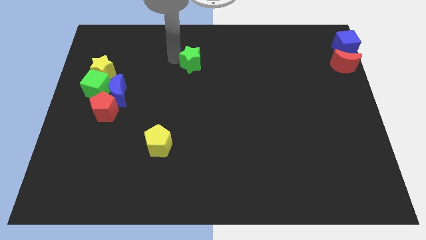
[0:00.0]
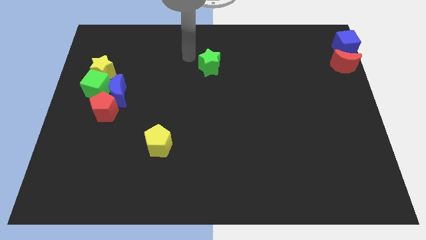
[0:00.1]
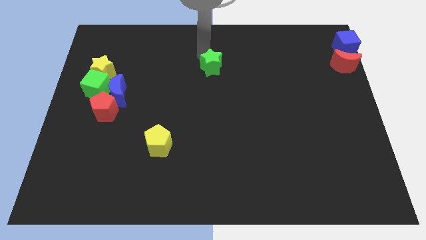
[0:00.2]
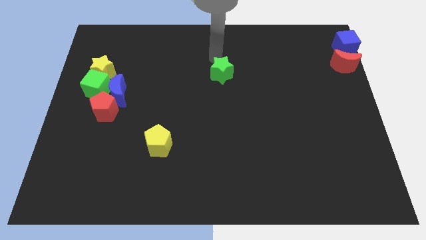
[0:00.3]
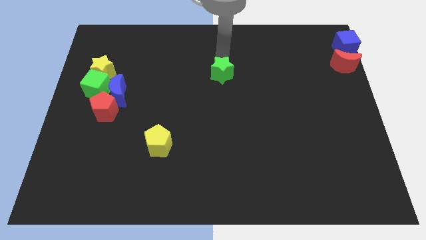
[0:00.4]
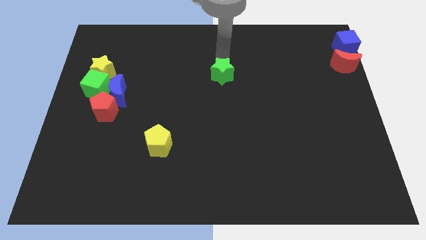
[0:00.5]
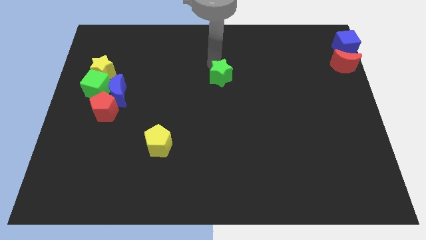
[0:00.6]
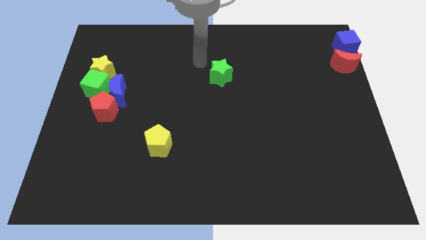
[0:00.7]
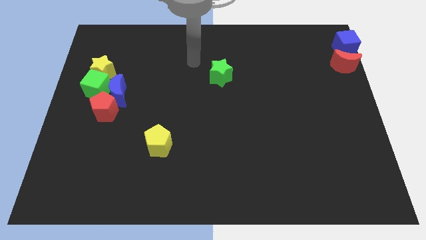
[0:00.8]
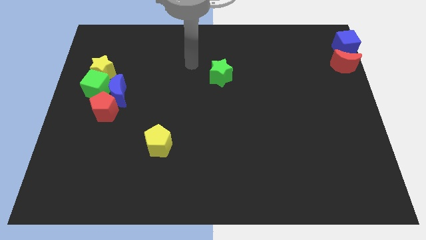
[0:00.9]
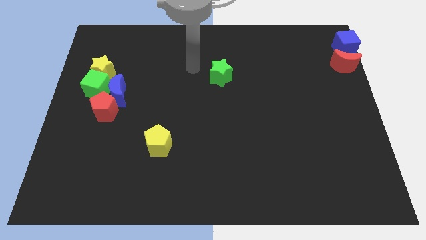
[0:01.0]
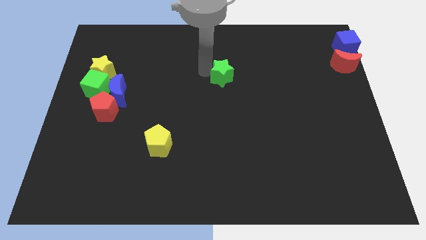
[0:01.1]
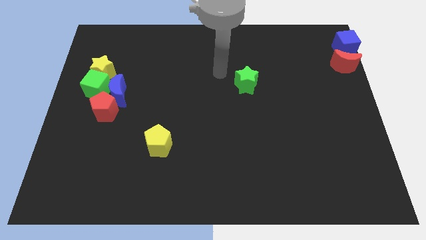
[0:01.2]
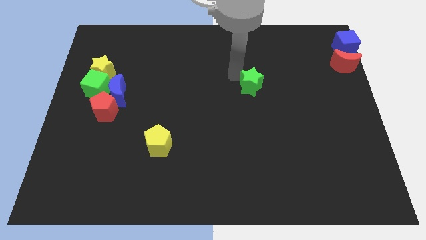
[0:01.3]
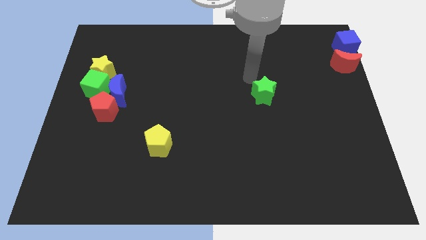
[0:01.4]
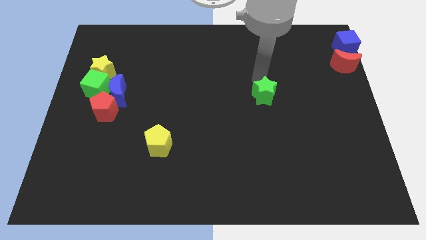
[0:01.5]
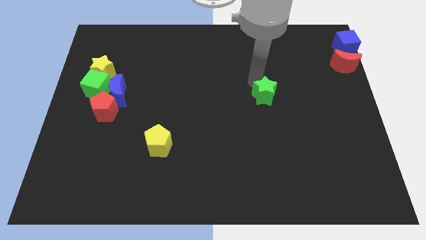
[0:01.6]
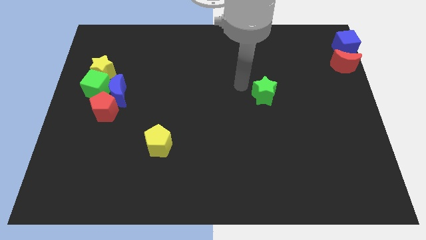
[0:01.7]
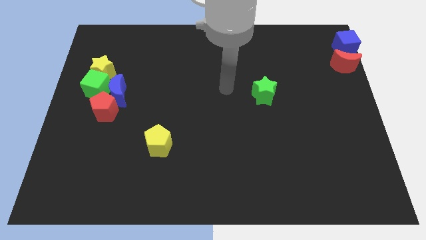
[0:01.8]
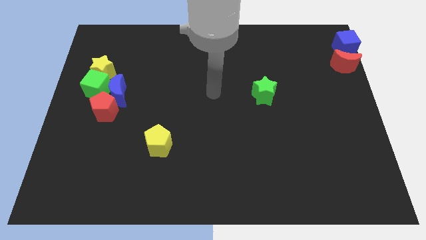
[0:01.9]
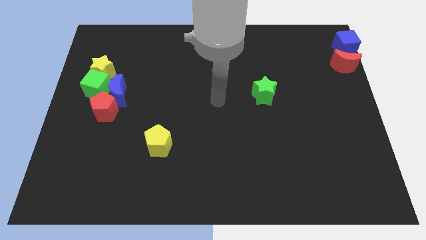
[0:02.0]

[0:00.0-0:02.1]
drag green star slightly towards the center right of the board

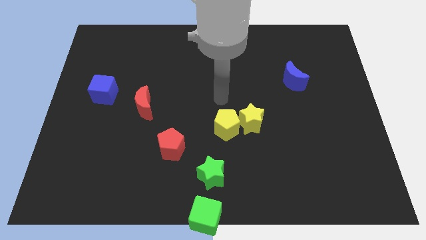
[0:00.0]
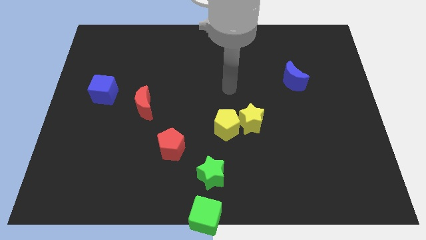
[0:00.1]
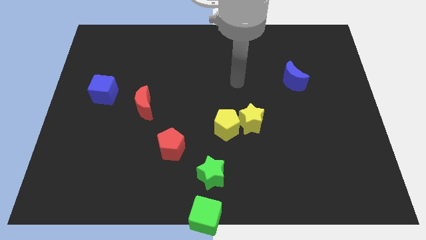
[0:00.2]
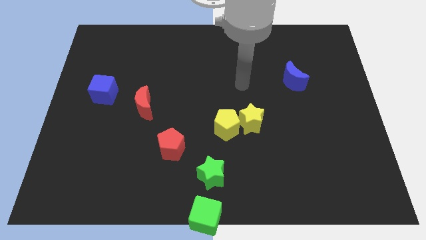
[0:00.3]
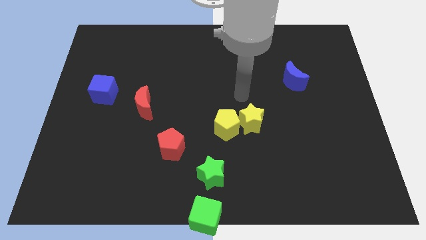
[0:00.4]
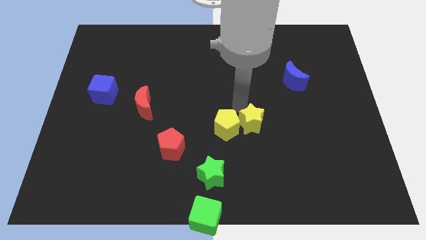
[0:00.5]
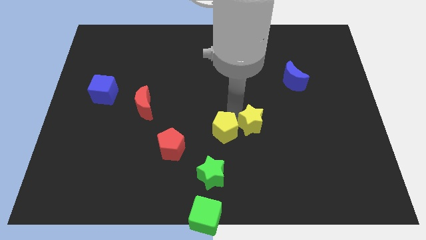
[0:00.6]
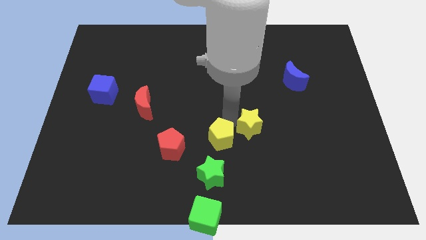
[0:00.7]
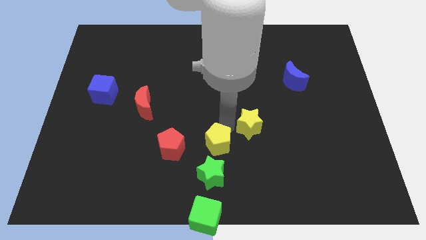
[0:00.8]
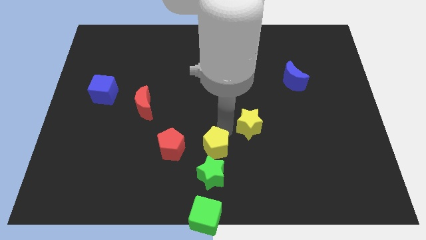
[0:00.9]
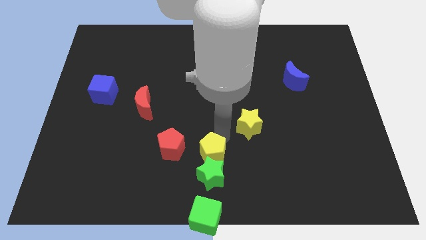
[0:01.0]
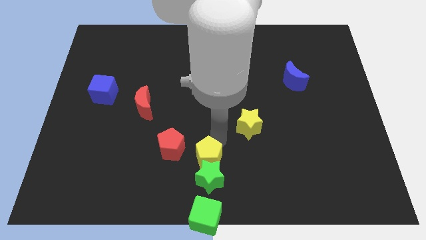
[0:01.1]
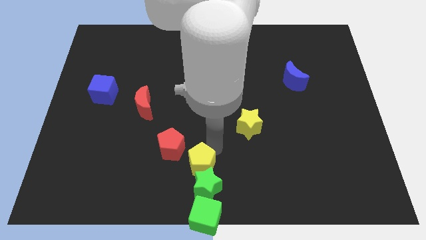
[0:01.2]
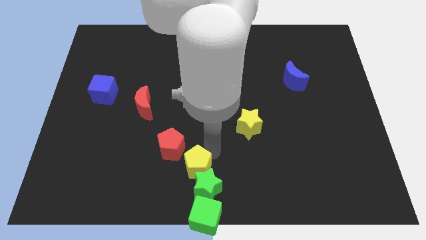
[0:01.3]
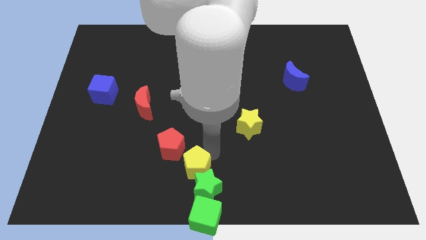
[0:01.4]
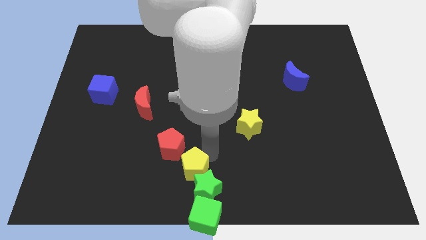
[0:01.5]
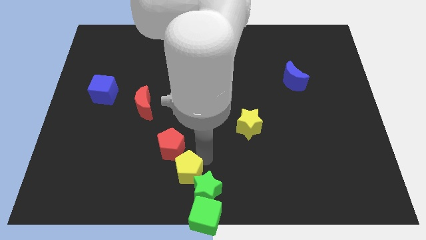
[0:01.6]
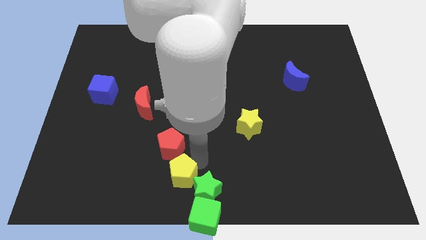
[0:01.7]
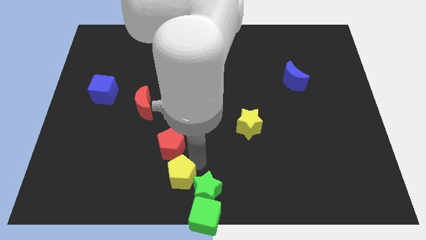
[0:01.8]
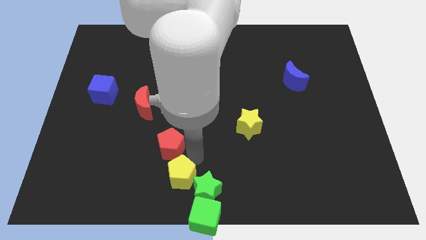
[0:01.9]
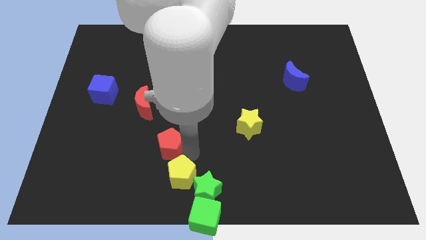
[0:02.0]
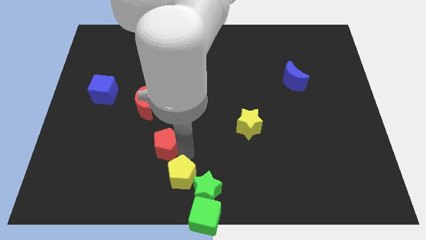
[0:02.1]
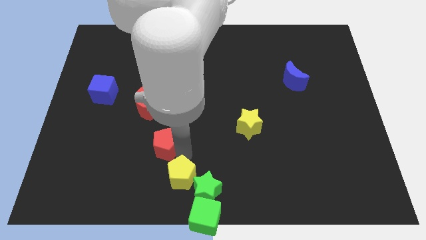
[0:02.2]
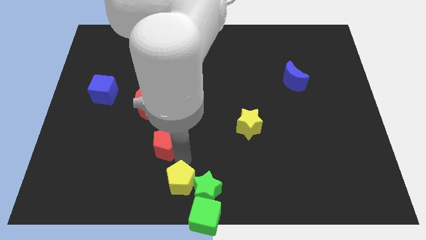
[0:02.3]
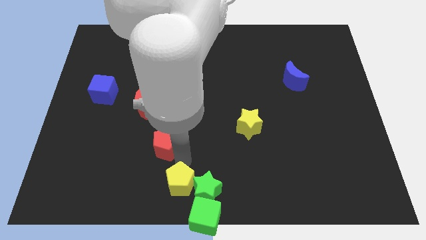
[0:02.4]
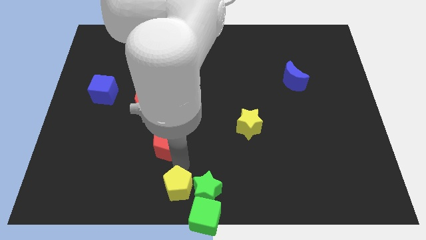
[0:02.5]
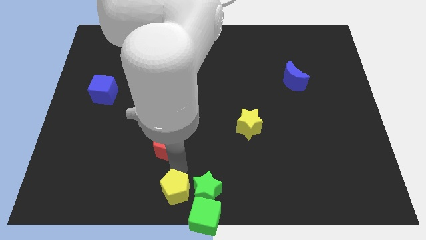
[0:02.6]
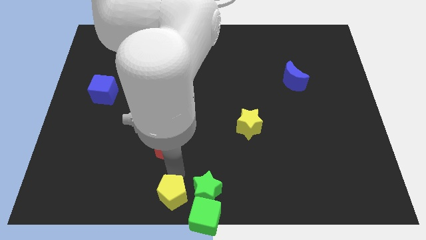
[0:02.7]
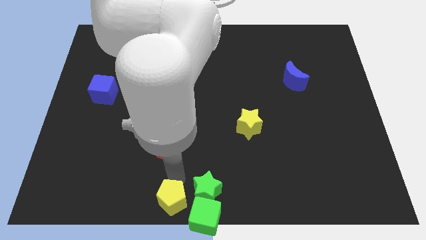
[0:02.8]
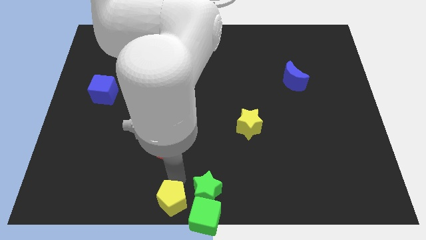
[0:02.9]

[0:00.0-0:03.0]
slide the yellow pentagon left to the green star

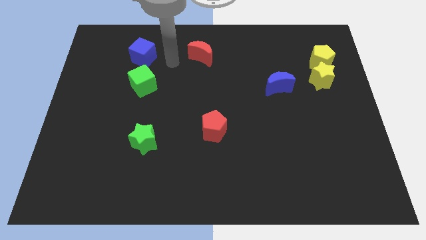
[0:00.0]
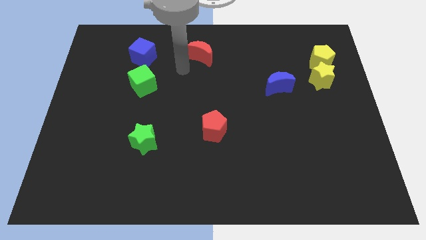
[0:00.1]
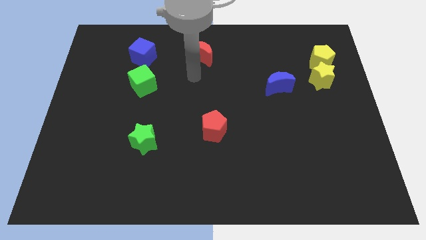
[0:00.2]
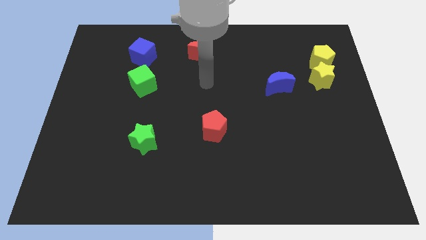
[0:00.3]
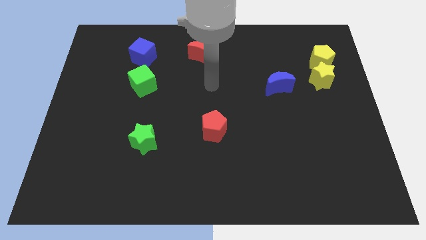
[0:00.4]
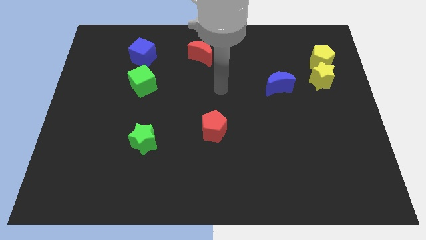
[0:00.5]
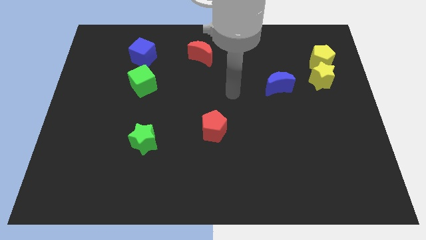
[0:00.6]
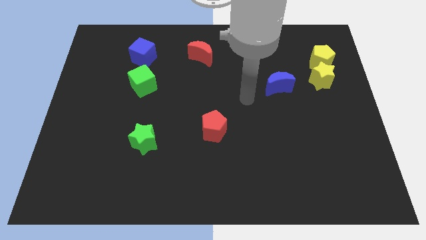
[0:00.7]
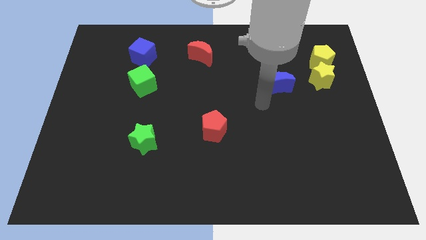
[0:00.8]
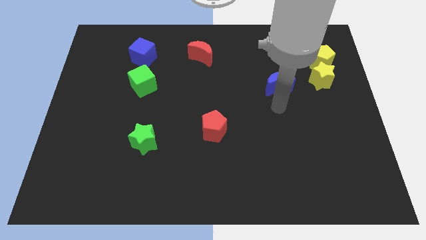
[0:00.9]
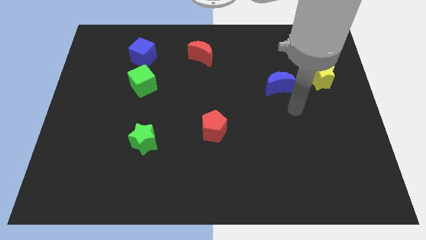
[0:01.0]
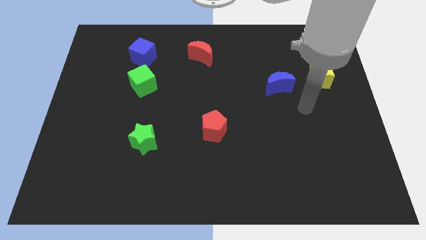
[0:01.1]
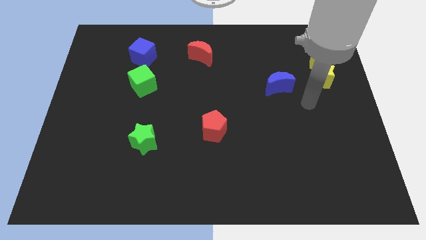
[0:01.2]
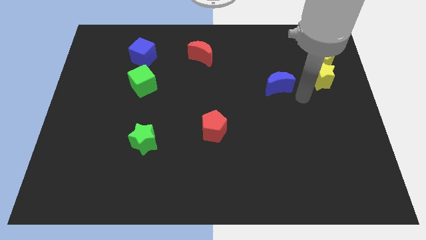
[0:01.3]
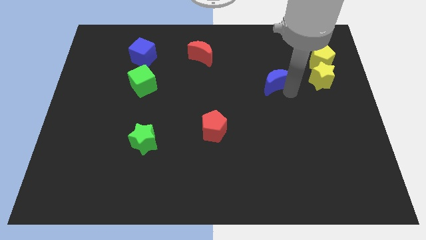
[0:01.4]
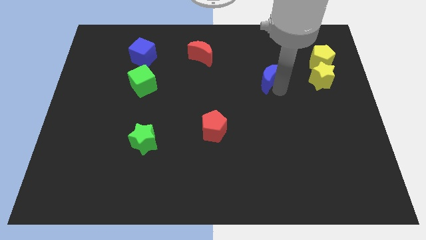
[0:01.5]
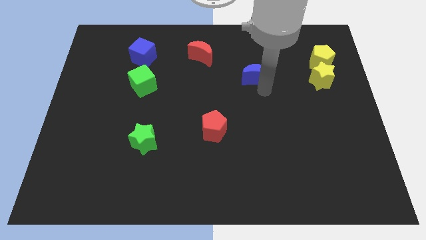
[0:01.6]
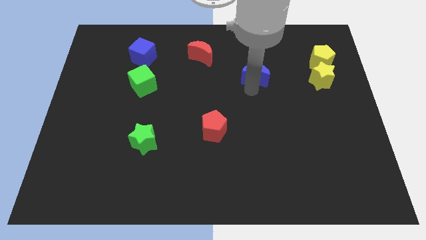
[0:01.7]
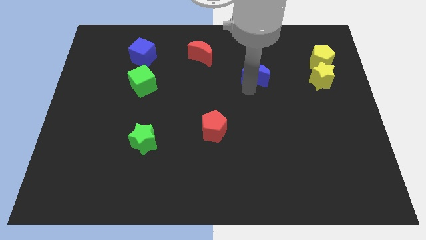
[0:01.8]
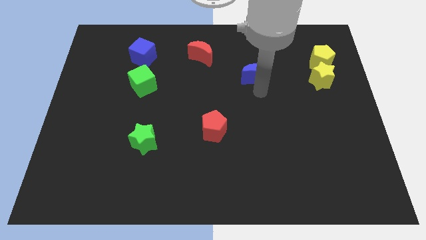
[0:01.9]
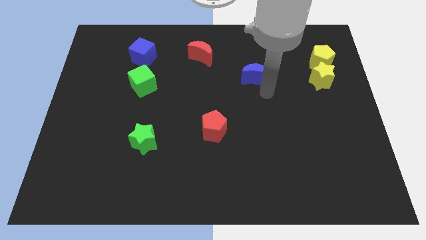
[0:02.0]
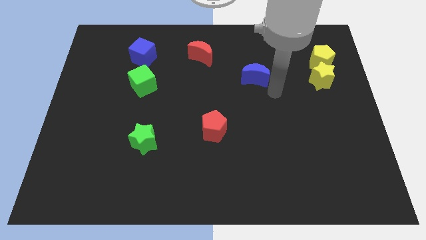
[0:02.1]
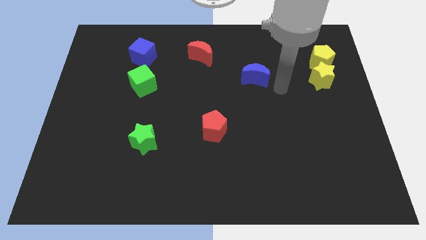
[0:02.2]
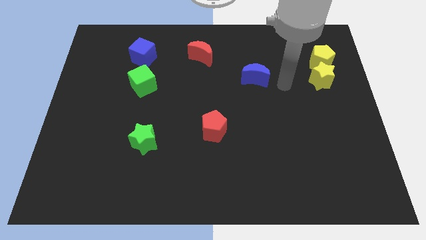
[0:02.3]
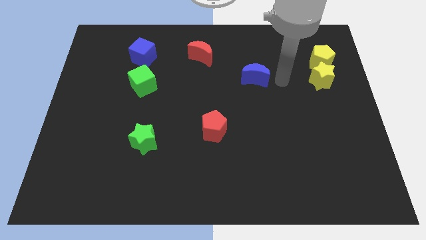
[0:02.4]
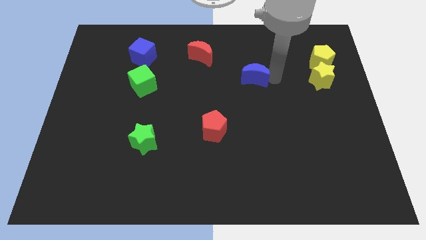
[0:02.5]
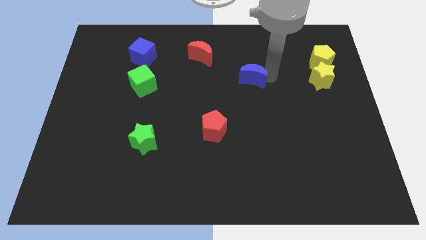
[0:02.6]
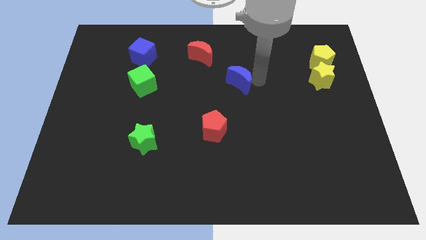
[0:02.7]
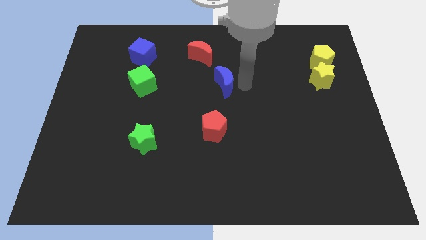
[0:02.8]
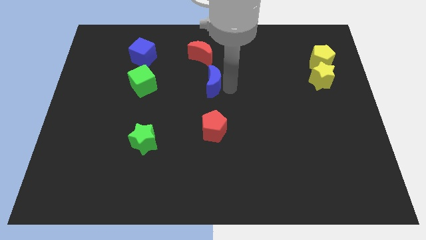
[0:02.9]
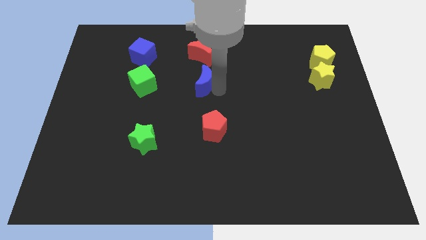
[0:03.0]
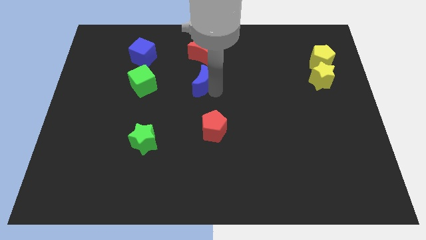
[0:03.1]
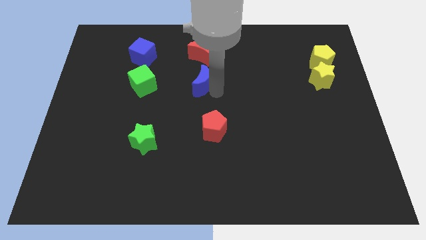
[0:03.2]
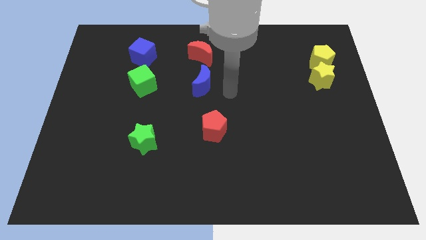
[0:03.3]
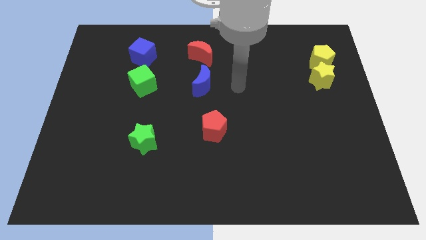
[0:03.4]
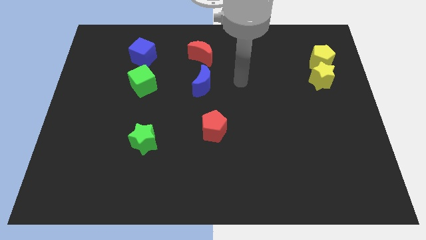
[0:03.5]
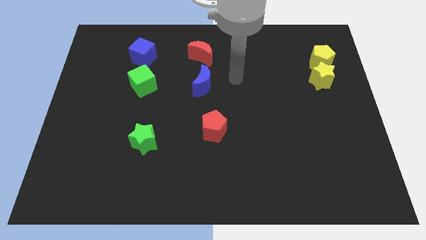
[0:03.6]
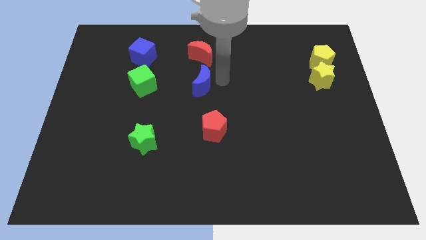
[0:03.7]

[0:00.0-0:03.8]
place the blue crescent below the red crescent

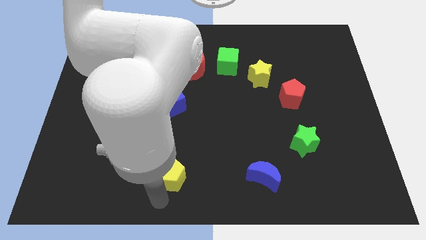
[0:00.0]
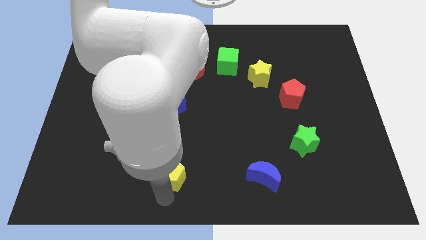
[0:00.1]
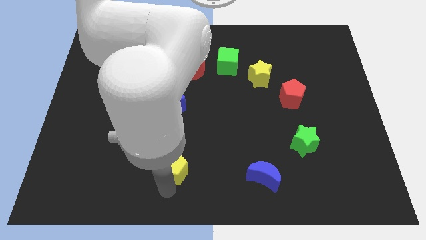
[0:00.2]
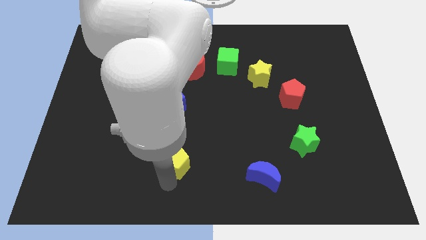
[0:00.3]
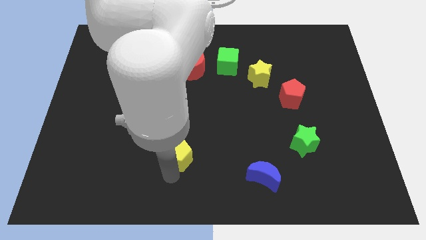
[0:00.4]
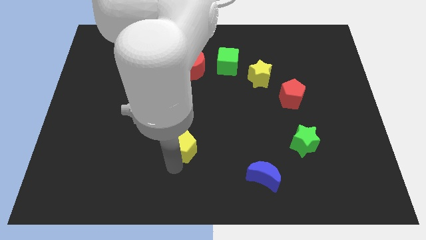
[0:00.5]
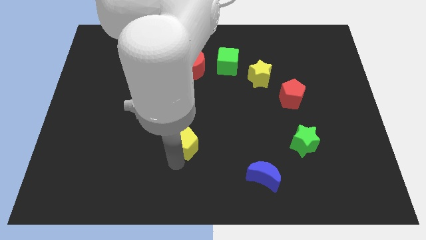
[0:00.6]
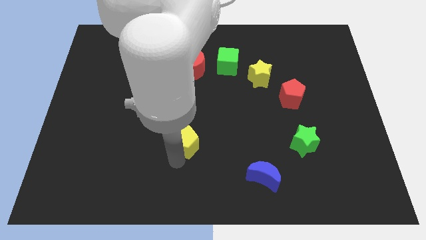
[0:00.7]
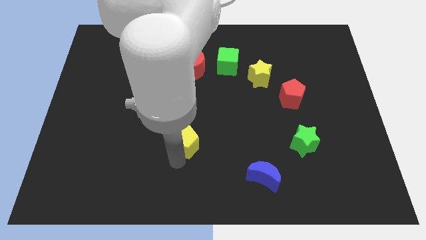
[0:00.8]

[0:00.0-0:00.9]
push the yellow pentagon towards the top
